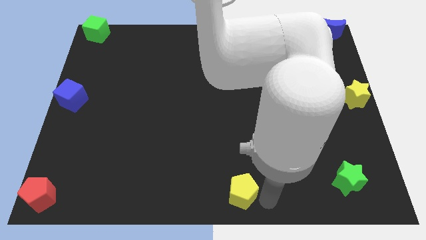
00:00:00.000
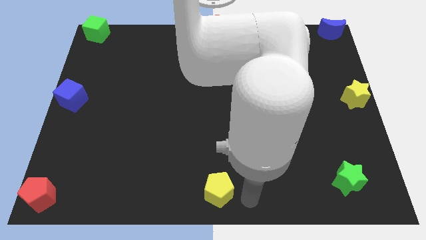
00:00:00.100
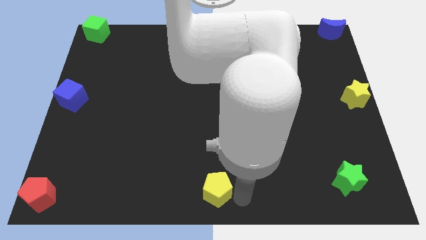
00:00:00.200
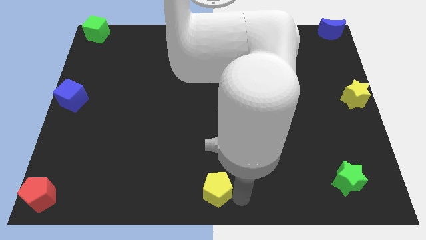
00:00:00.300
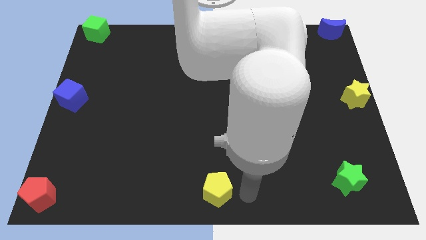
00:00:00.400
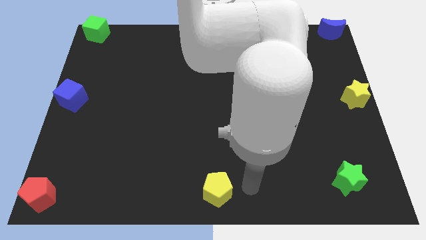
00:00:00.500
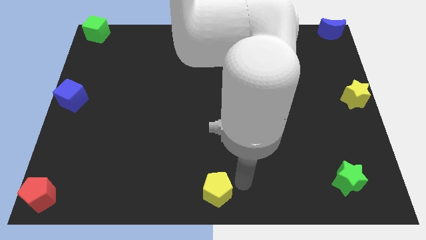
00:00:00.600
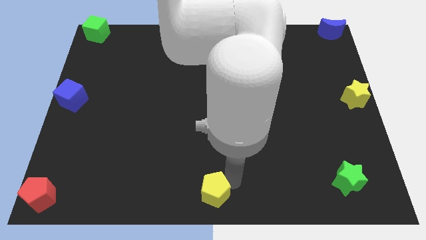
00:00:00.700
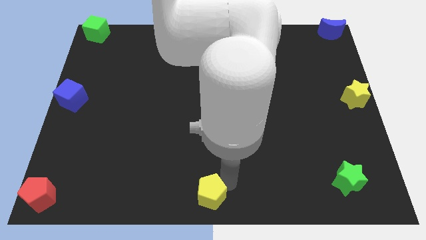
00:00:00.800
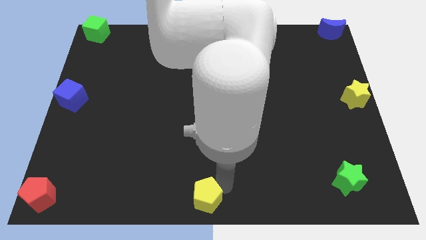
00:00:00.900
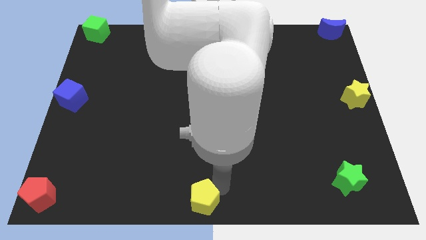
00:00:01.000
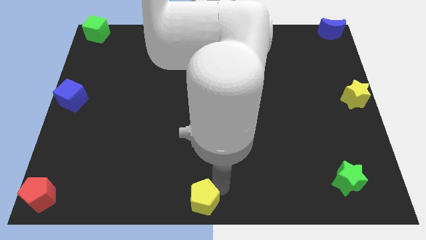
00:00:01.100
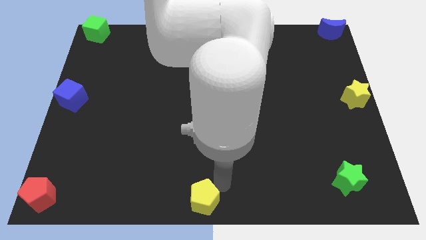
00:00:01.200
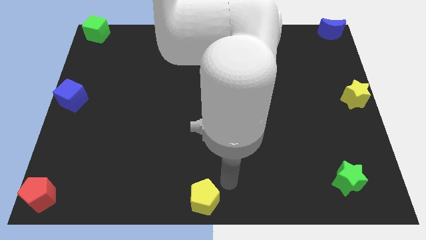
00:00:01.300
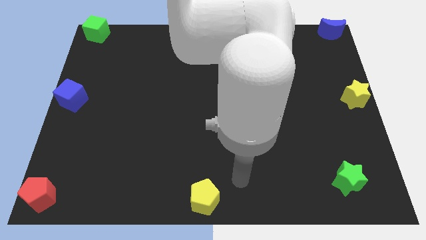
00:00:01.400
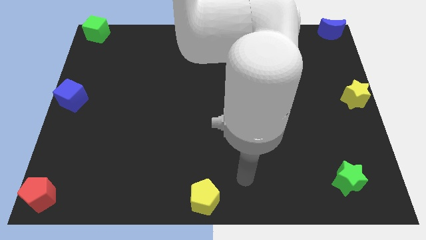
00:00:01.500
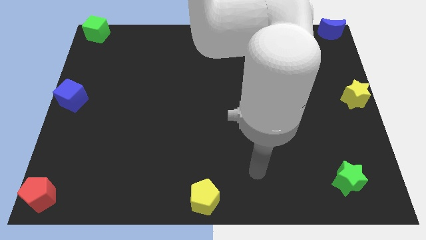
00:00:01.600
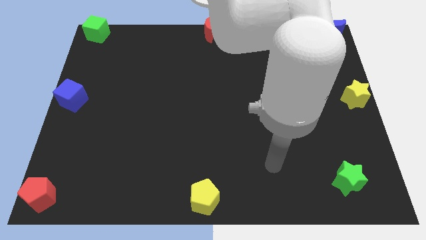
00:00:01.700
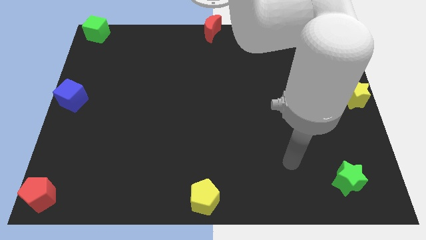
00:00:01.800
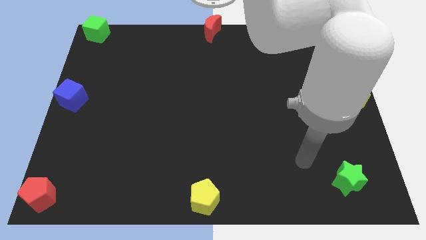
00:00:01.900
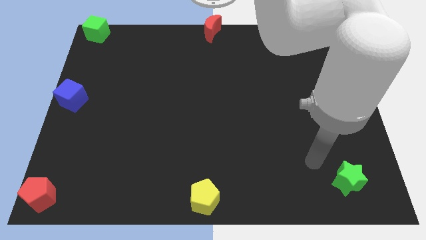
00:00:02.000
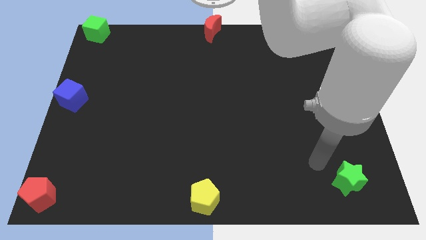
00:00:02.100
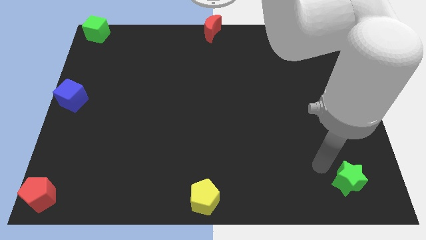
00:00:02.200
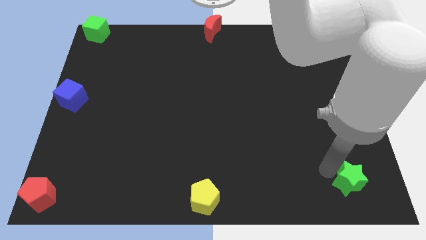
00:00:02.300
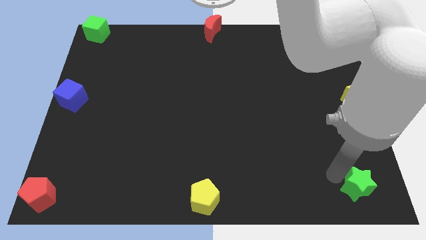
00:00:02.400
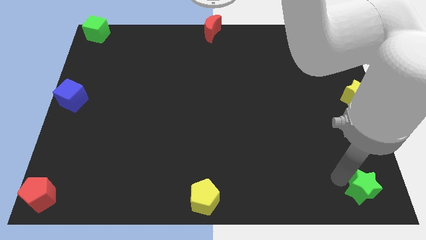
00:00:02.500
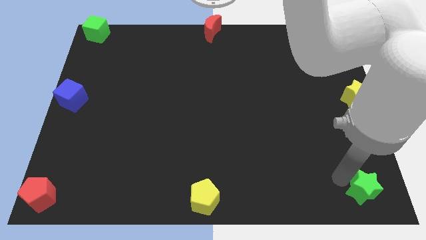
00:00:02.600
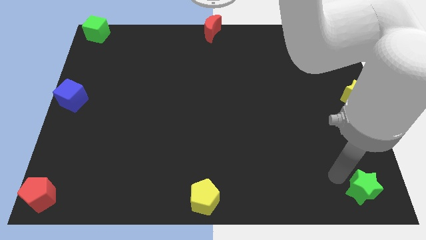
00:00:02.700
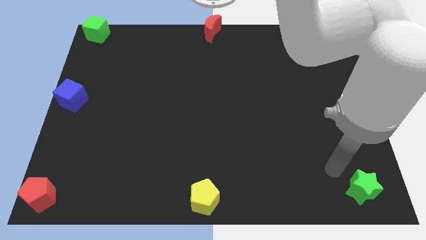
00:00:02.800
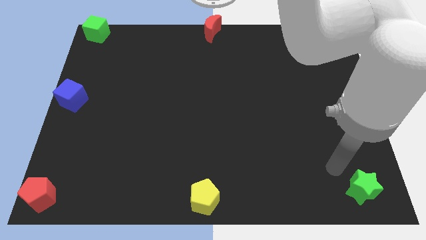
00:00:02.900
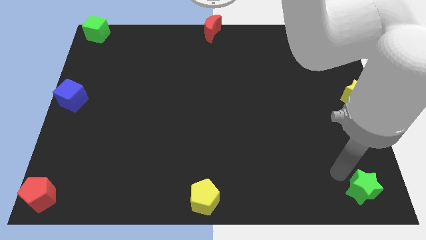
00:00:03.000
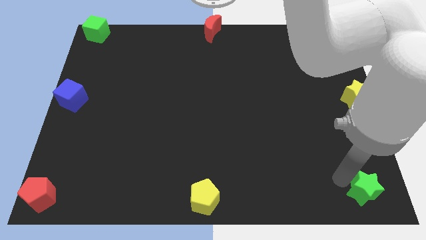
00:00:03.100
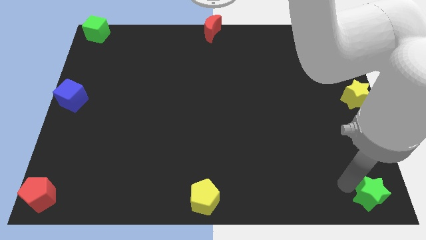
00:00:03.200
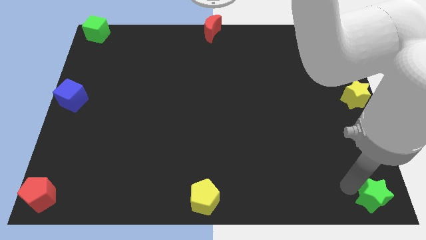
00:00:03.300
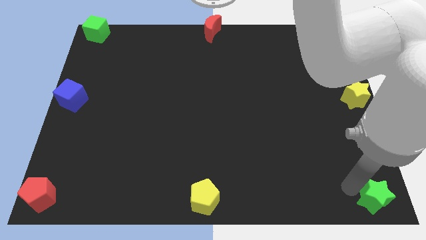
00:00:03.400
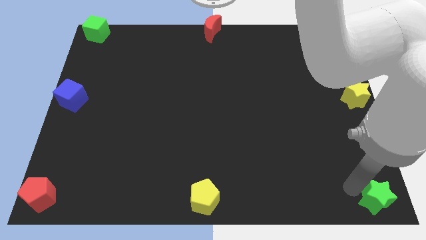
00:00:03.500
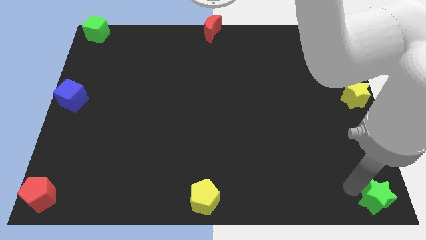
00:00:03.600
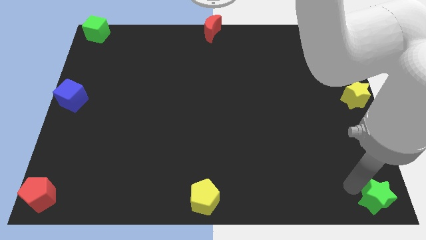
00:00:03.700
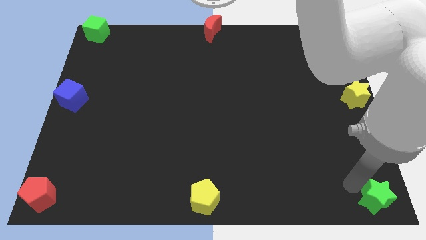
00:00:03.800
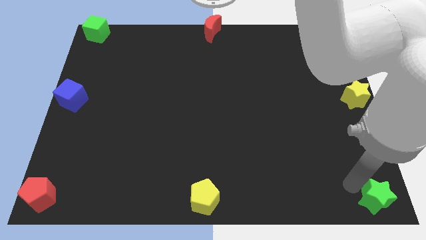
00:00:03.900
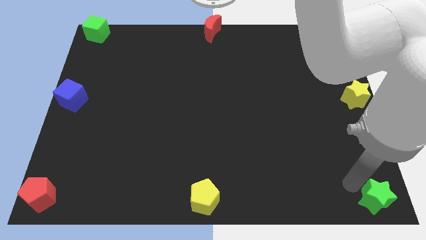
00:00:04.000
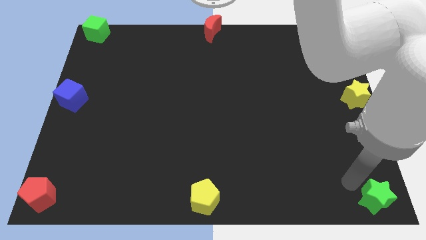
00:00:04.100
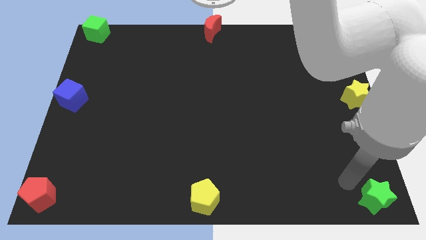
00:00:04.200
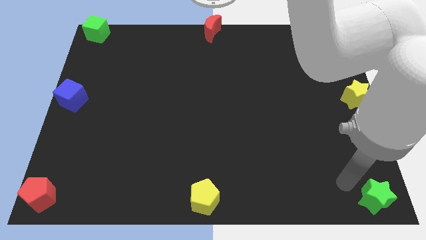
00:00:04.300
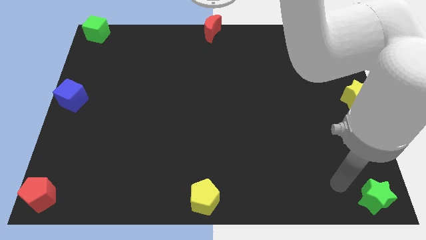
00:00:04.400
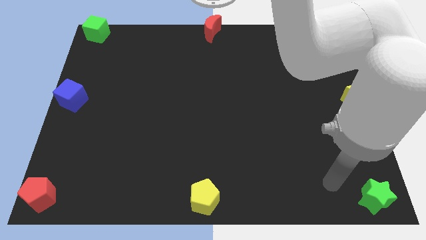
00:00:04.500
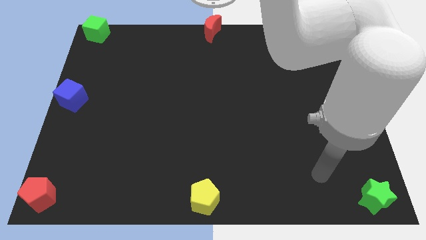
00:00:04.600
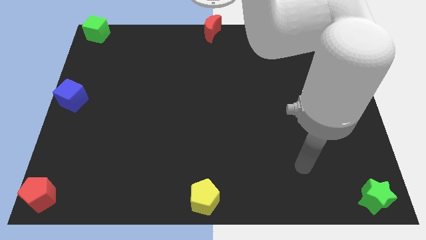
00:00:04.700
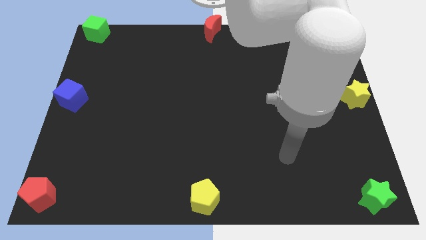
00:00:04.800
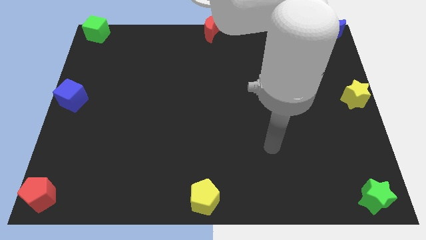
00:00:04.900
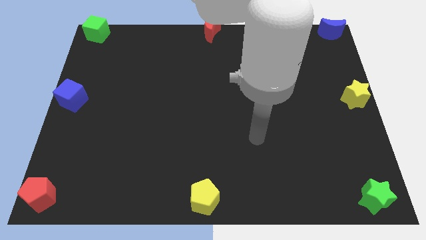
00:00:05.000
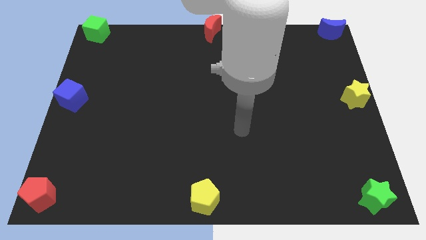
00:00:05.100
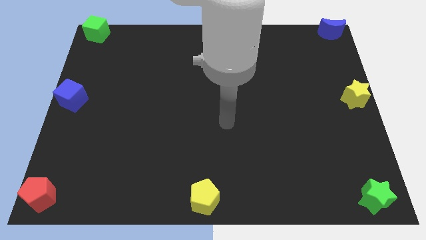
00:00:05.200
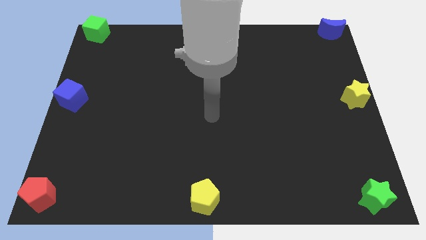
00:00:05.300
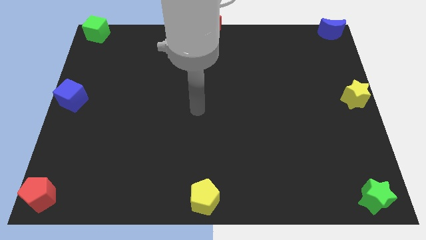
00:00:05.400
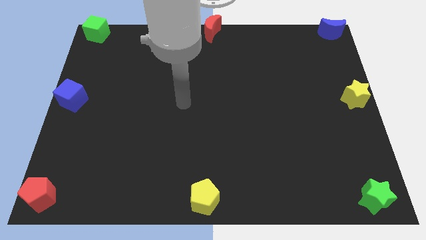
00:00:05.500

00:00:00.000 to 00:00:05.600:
move the green star to the bottom right side

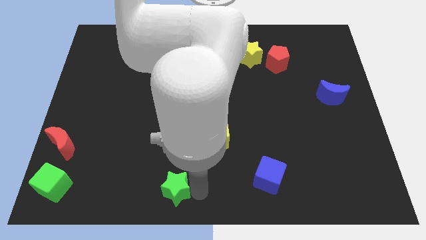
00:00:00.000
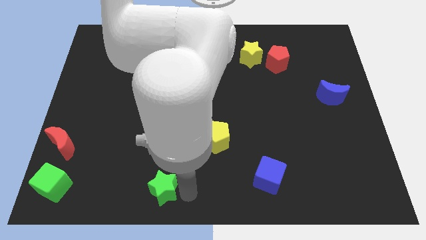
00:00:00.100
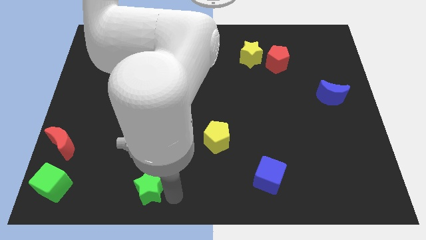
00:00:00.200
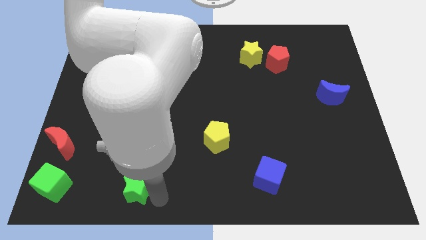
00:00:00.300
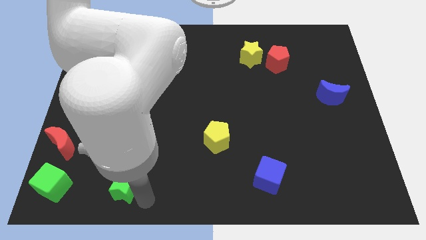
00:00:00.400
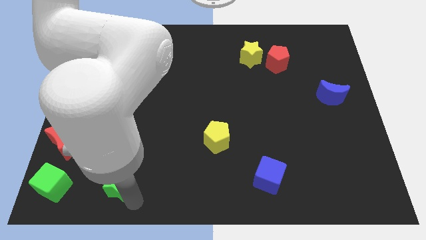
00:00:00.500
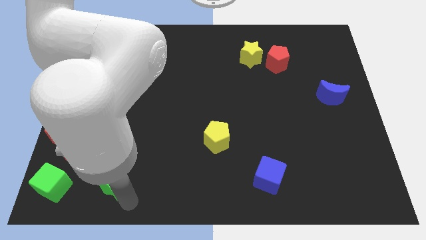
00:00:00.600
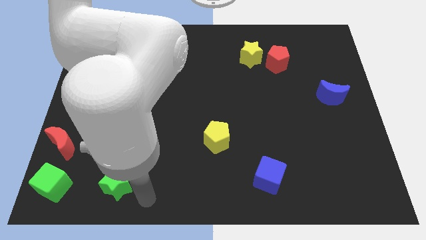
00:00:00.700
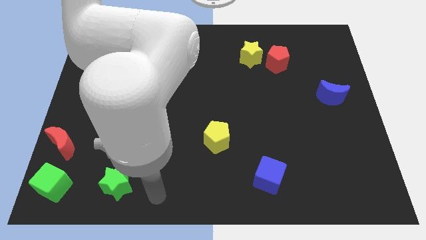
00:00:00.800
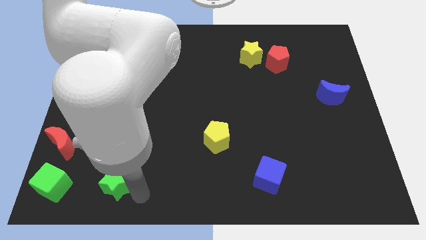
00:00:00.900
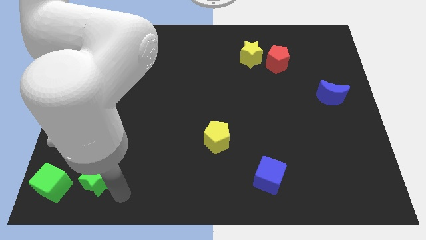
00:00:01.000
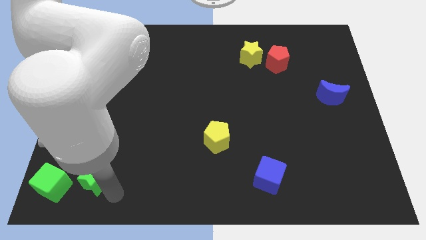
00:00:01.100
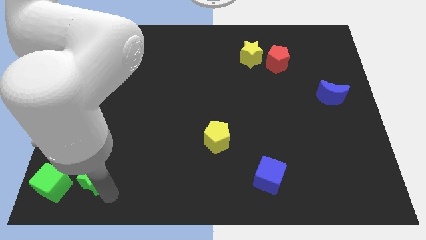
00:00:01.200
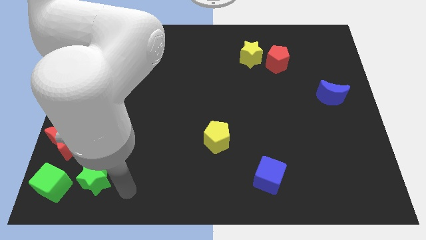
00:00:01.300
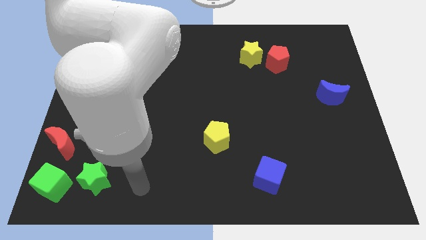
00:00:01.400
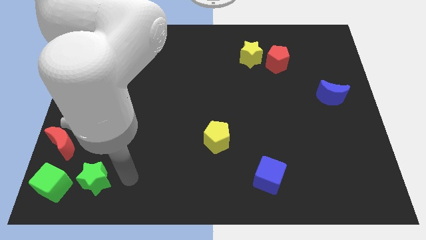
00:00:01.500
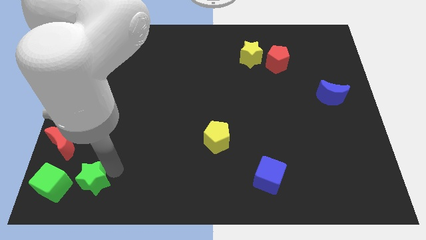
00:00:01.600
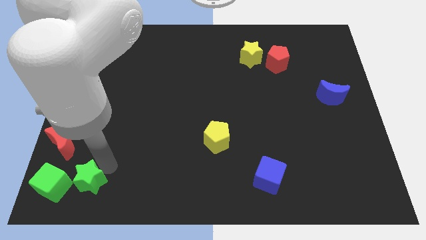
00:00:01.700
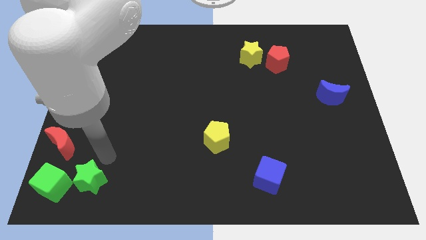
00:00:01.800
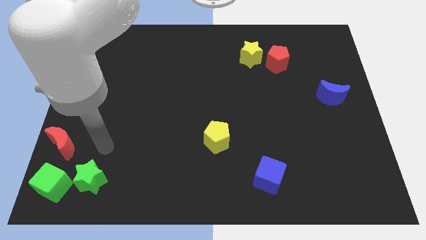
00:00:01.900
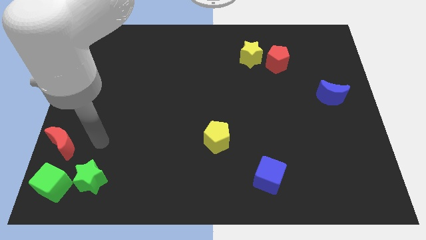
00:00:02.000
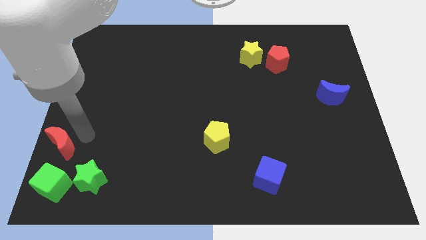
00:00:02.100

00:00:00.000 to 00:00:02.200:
place the green star diagonally top right to the green cube

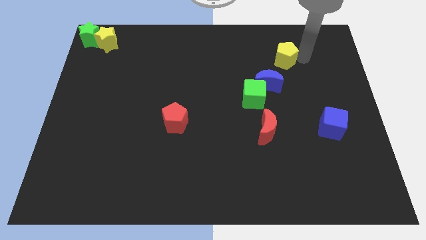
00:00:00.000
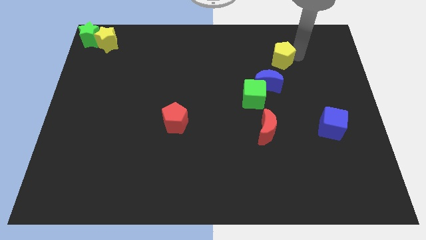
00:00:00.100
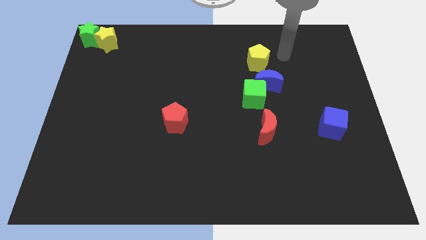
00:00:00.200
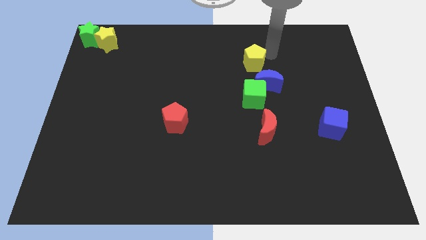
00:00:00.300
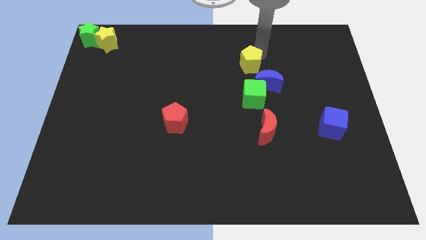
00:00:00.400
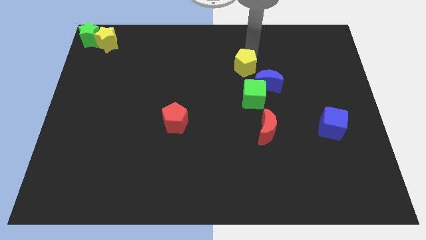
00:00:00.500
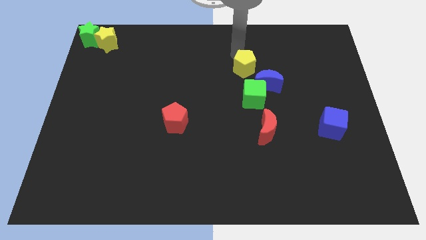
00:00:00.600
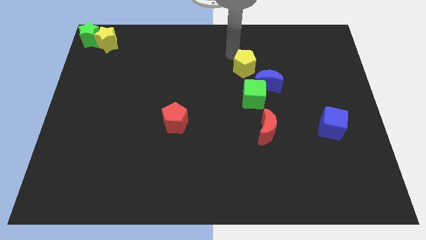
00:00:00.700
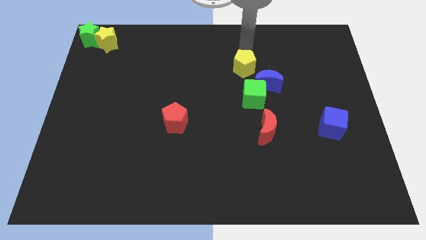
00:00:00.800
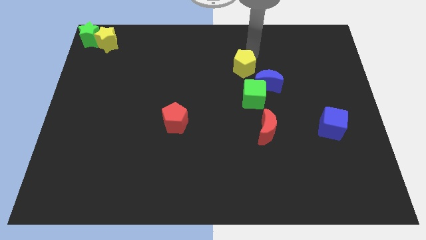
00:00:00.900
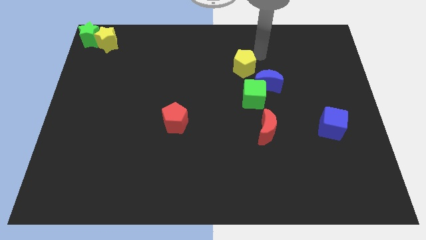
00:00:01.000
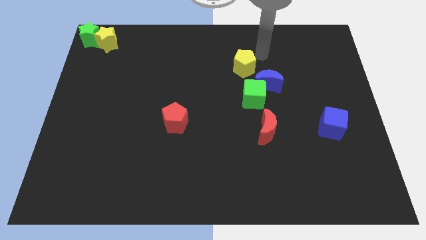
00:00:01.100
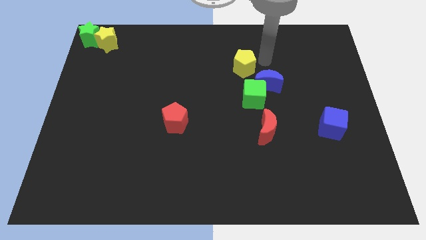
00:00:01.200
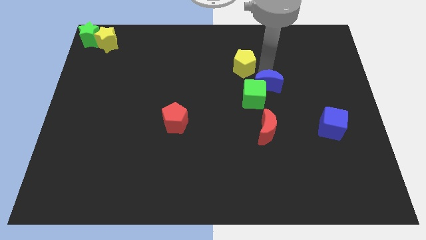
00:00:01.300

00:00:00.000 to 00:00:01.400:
push the yellow pentagon to the slightly top left corner of the blue crescent

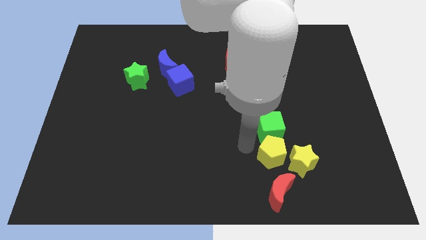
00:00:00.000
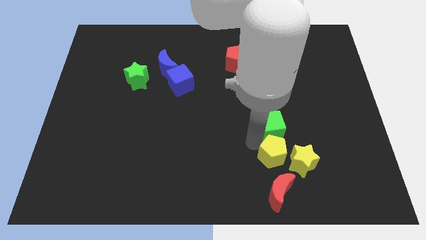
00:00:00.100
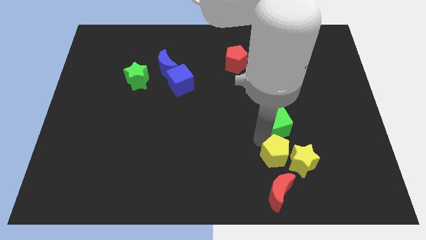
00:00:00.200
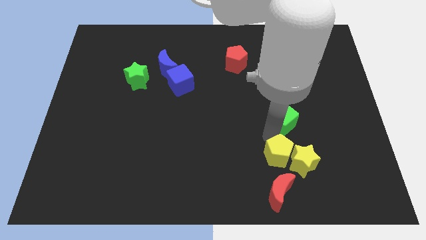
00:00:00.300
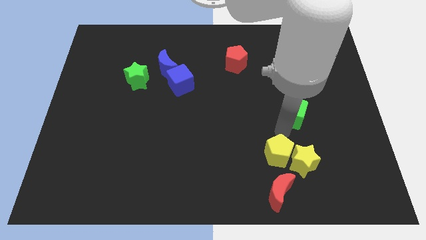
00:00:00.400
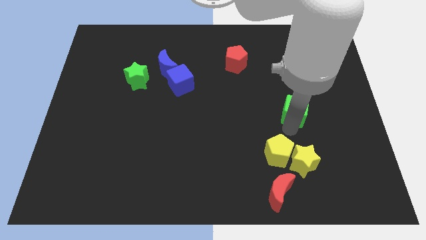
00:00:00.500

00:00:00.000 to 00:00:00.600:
separate the yellow pentagon and green cube
